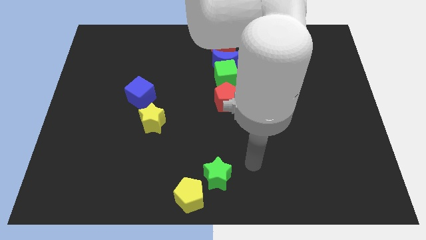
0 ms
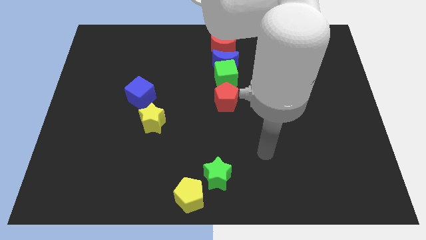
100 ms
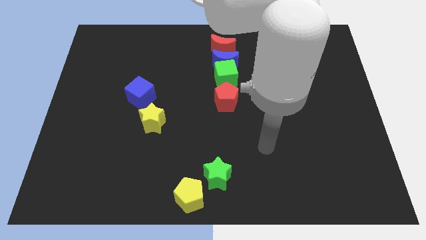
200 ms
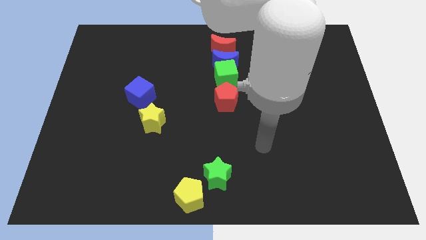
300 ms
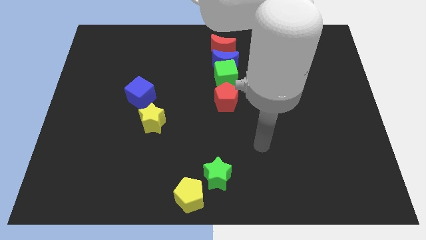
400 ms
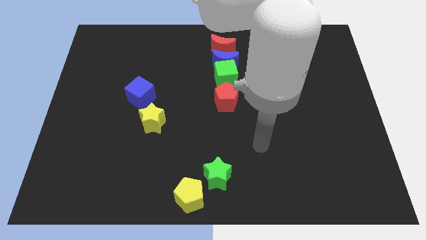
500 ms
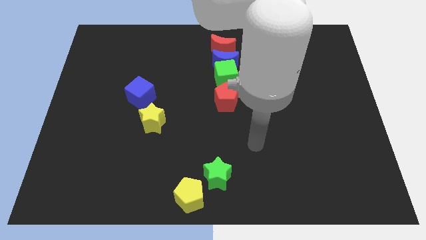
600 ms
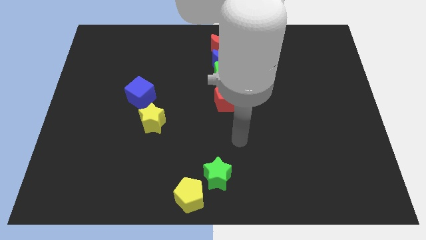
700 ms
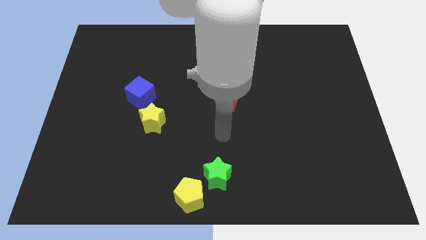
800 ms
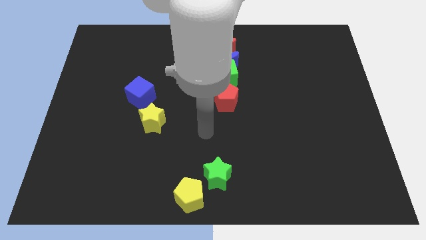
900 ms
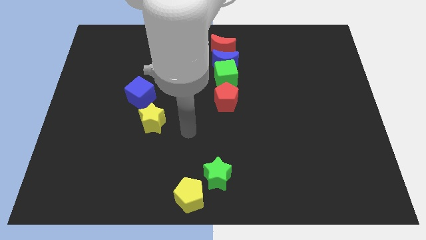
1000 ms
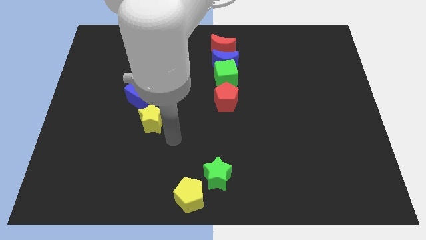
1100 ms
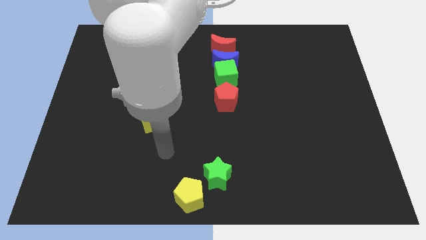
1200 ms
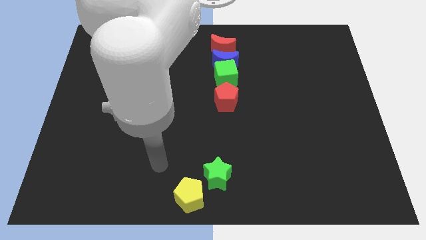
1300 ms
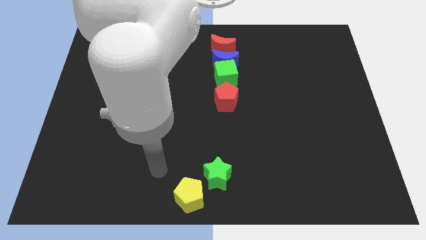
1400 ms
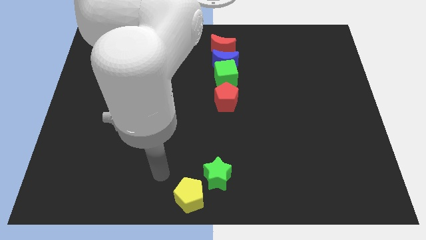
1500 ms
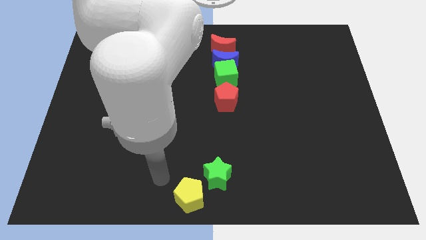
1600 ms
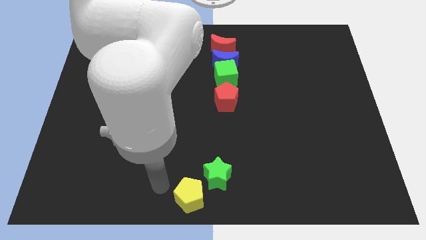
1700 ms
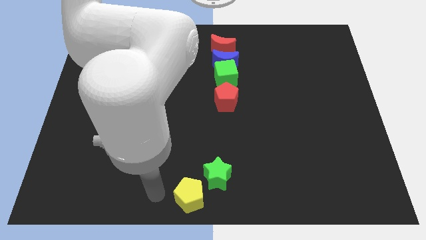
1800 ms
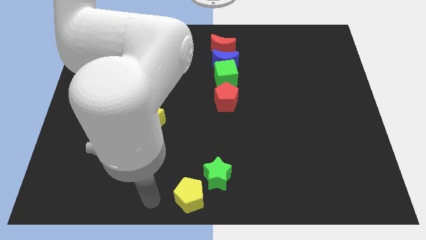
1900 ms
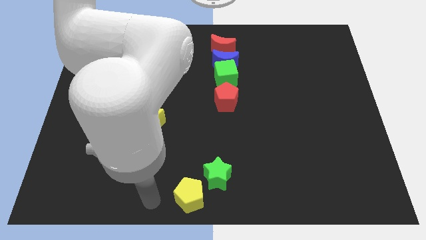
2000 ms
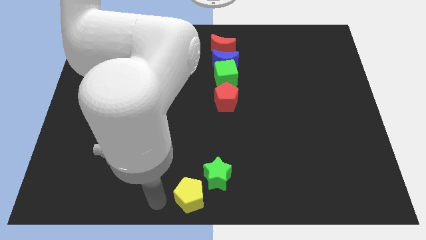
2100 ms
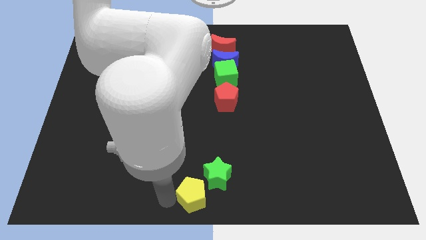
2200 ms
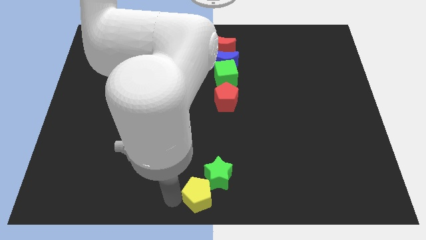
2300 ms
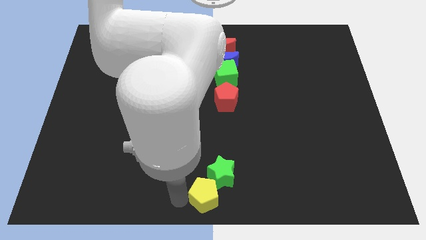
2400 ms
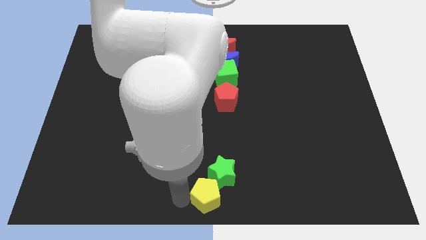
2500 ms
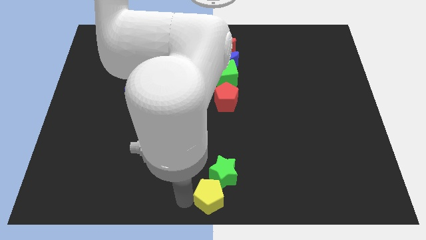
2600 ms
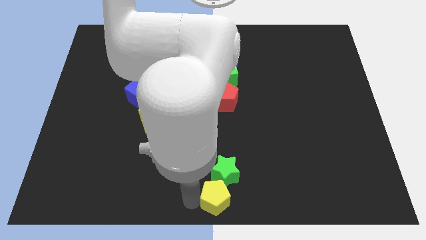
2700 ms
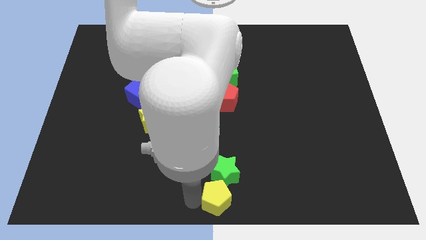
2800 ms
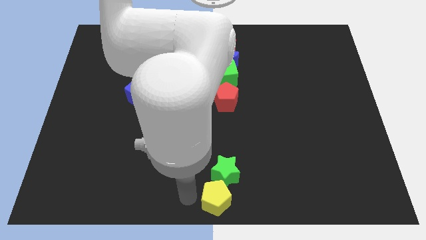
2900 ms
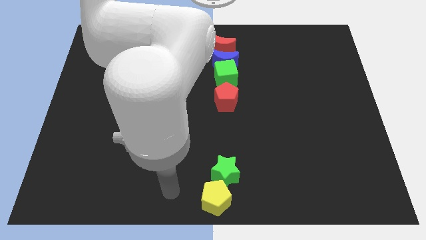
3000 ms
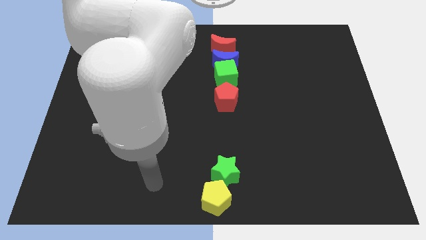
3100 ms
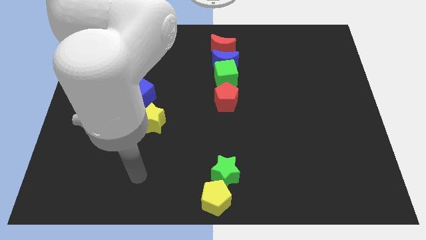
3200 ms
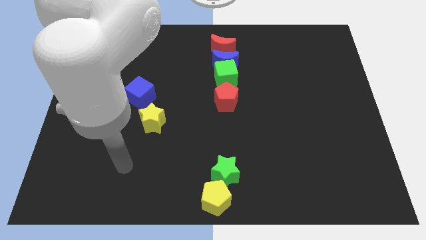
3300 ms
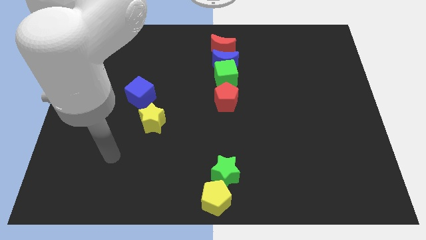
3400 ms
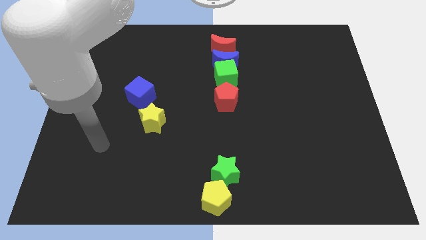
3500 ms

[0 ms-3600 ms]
place the yellow pentagon below the green star

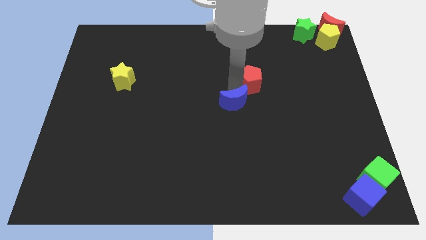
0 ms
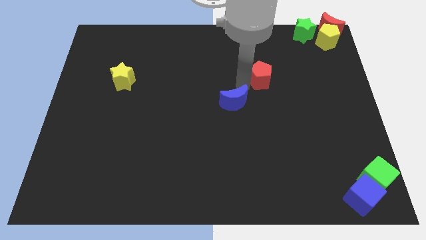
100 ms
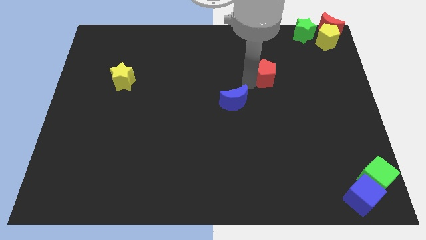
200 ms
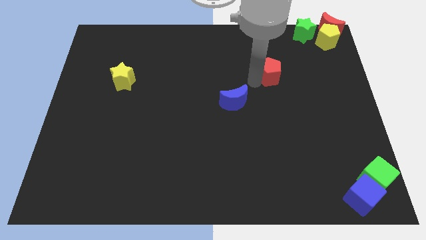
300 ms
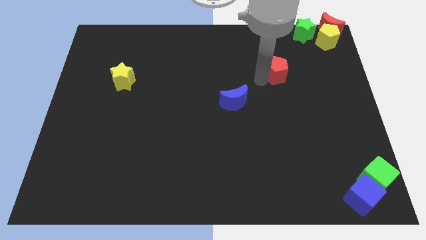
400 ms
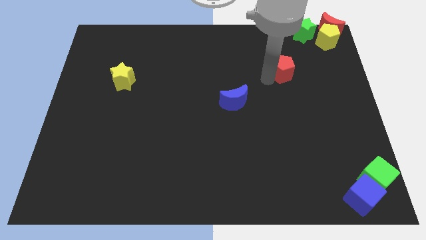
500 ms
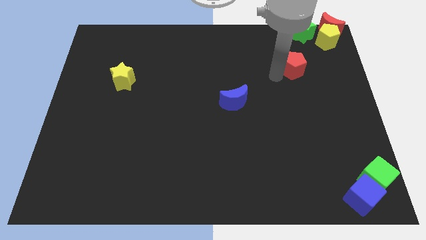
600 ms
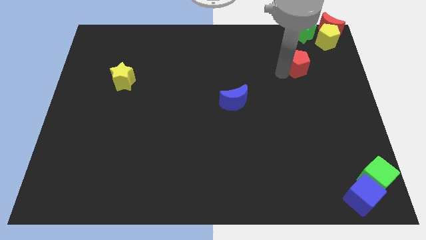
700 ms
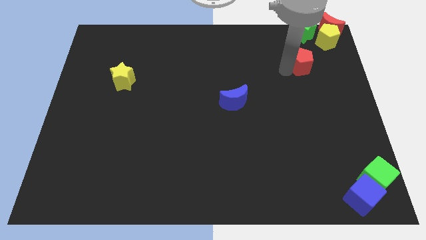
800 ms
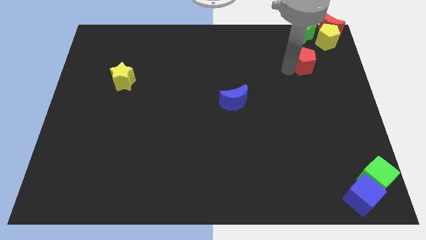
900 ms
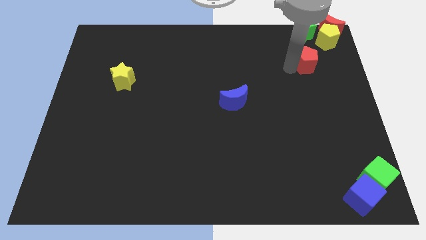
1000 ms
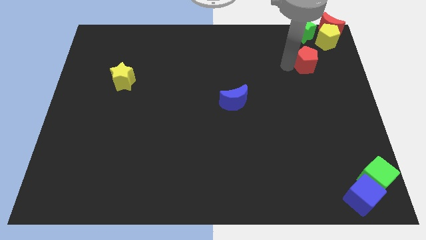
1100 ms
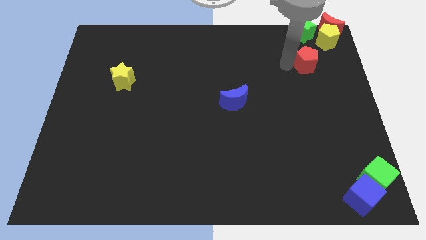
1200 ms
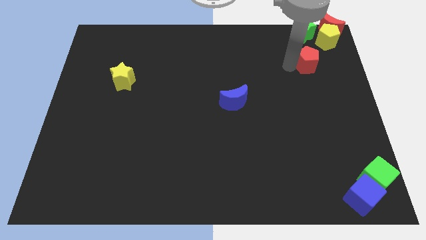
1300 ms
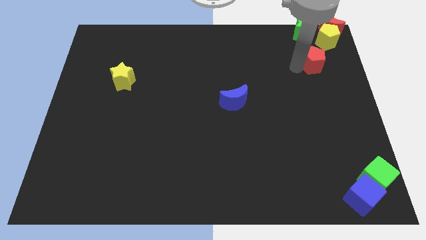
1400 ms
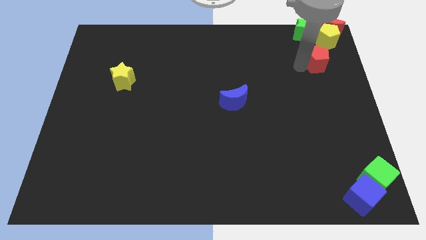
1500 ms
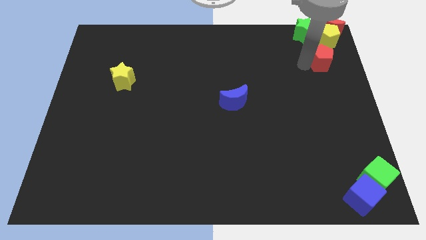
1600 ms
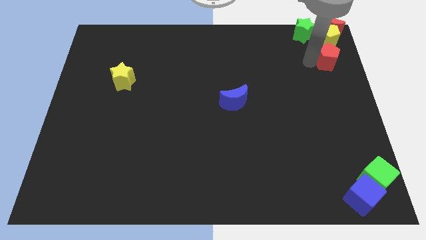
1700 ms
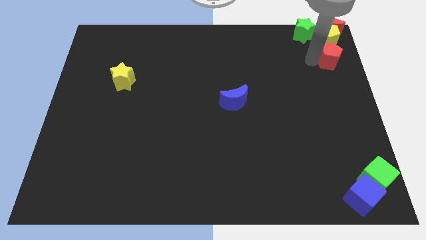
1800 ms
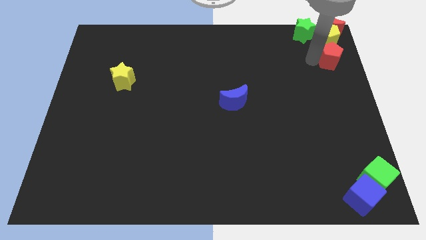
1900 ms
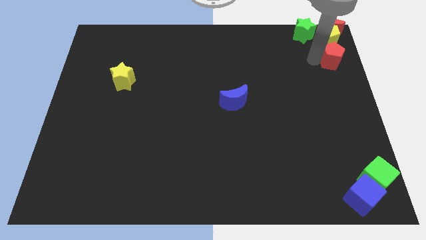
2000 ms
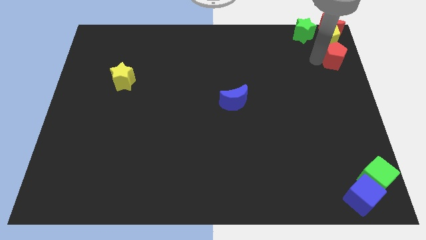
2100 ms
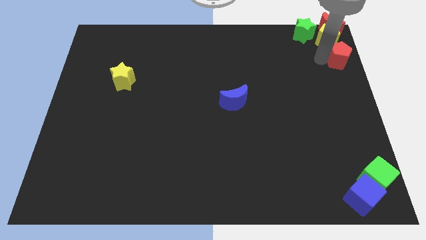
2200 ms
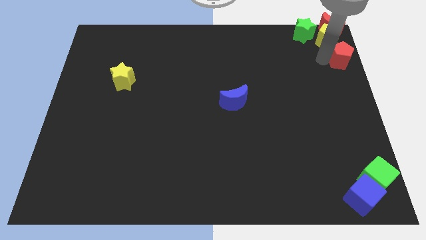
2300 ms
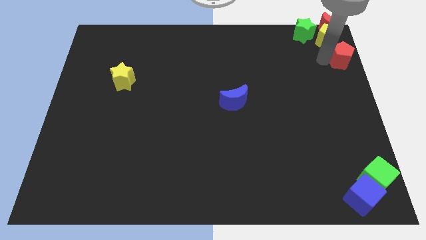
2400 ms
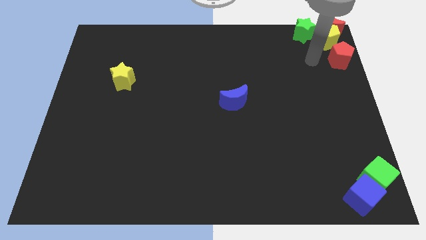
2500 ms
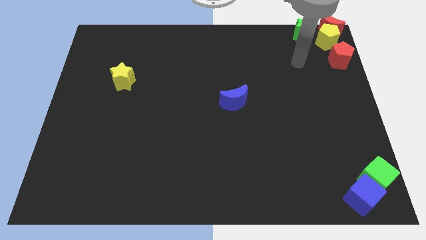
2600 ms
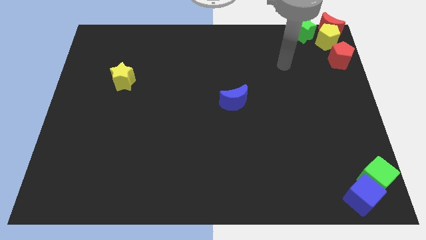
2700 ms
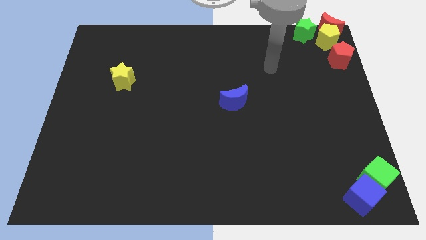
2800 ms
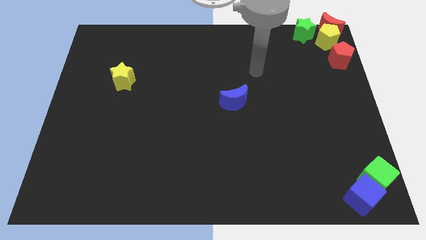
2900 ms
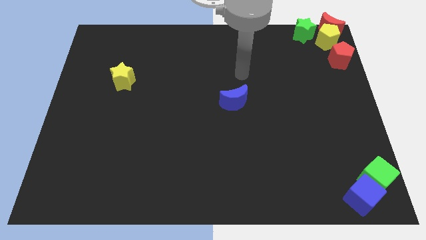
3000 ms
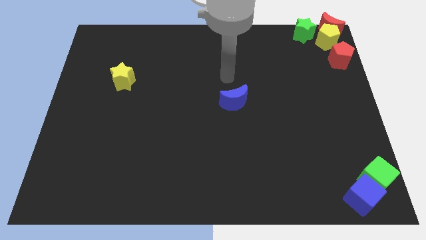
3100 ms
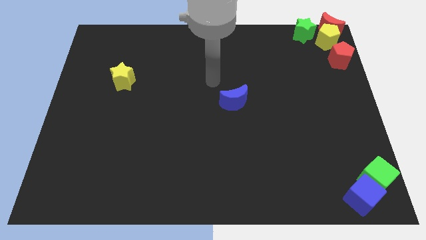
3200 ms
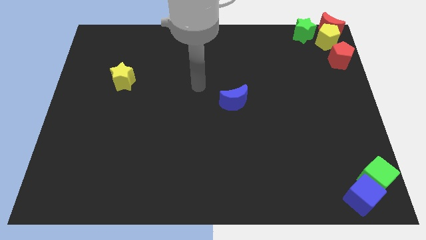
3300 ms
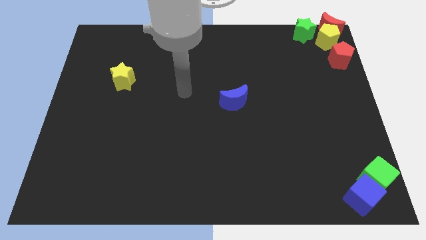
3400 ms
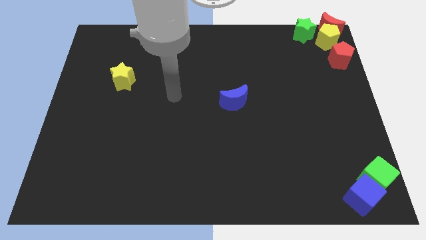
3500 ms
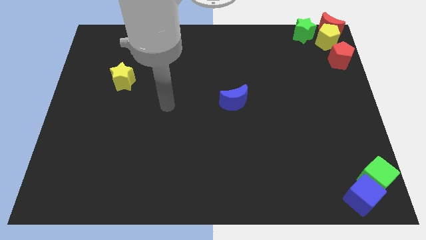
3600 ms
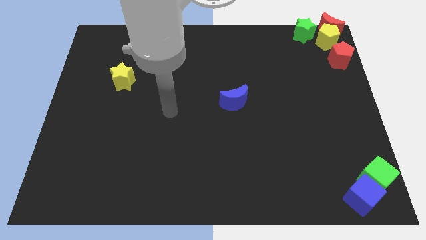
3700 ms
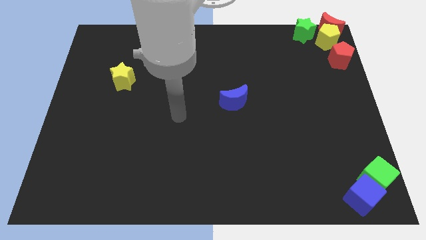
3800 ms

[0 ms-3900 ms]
separate the red pentagon from the blue crescent

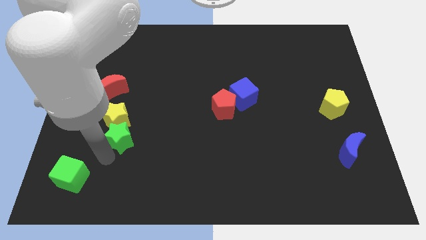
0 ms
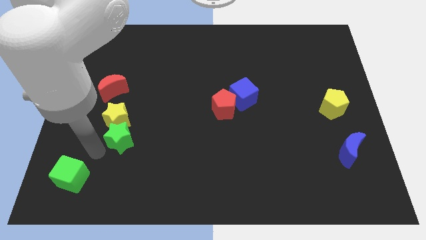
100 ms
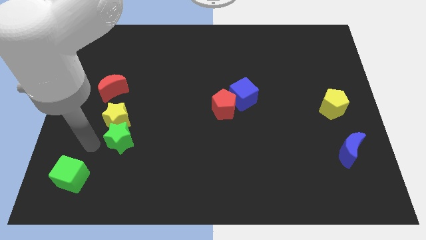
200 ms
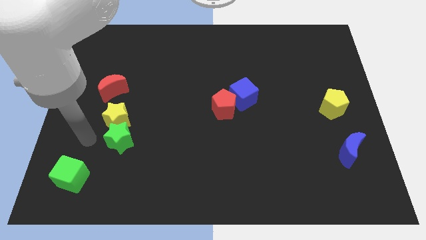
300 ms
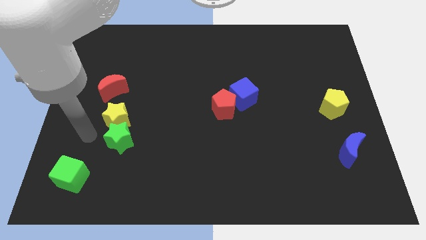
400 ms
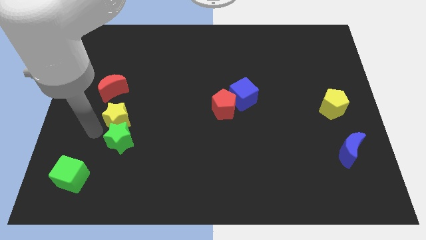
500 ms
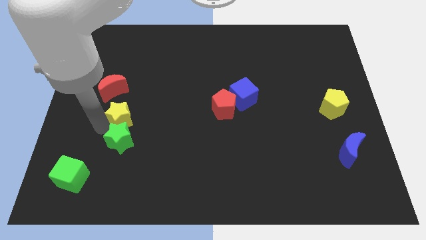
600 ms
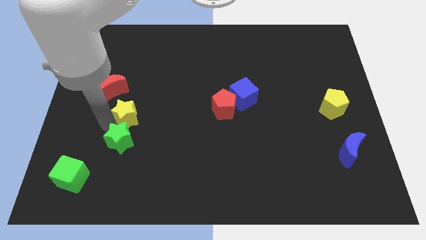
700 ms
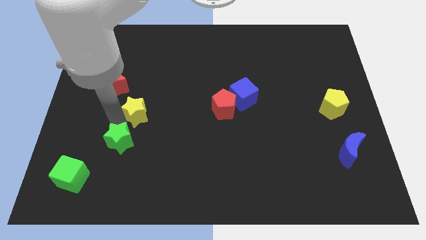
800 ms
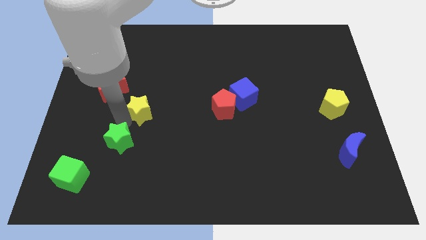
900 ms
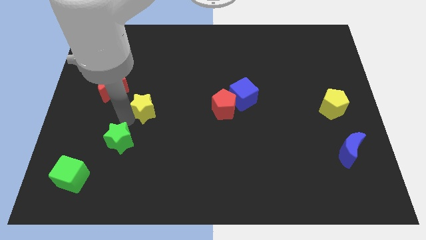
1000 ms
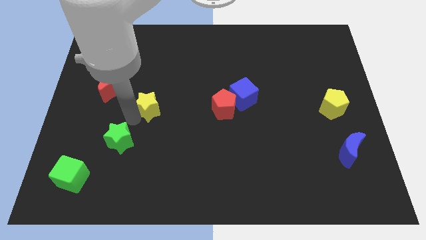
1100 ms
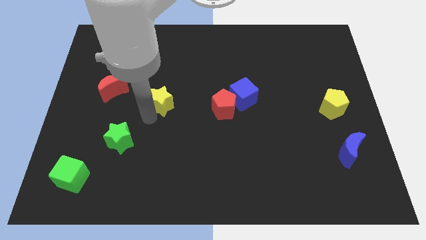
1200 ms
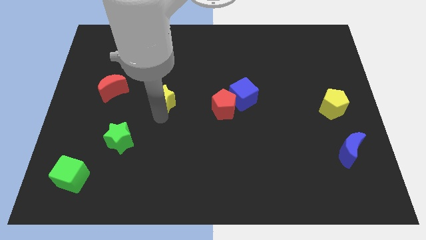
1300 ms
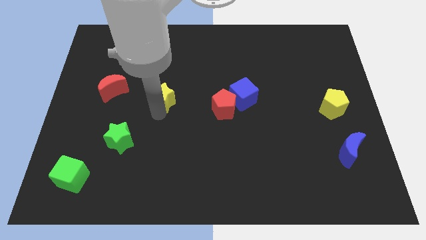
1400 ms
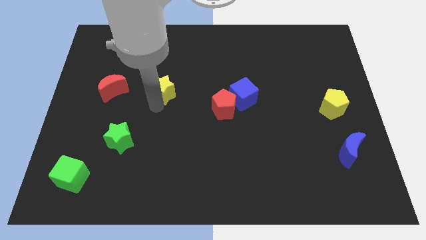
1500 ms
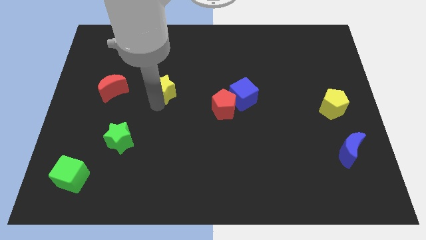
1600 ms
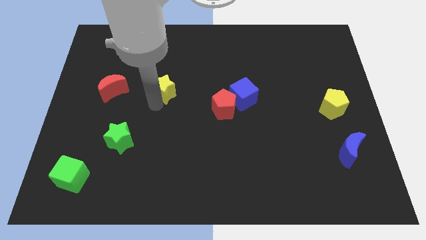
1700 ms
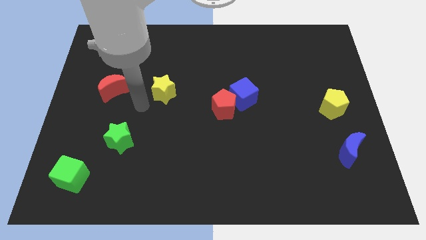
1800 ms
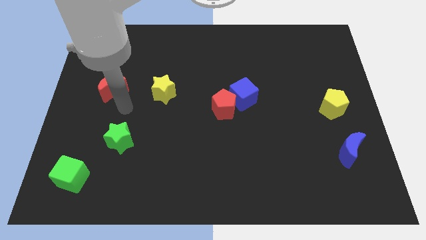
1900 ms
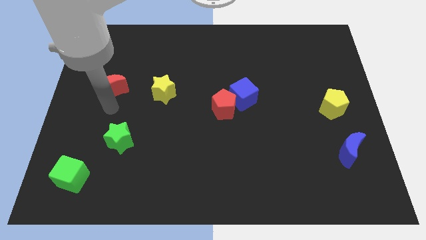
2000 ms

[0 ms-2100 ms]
place the yellow star to the right of red moon
